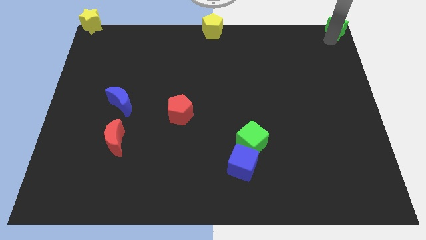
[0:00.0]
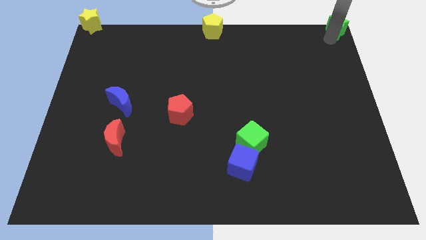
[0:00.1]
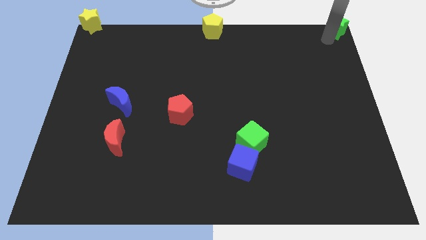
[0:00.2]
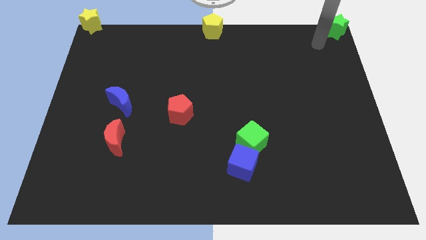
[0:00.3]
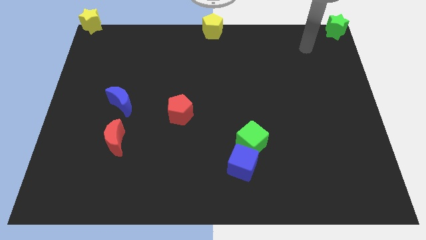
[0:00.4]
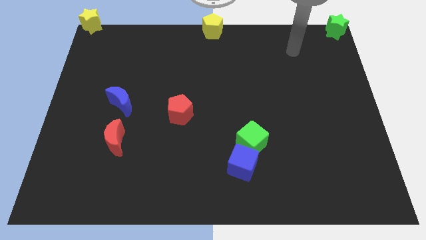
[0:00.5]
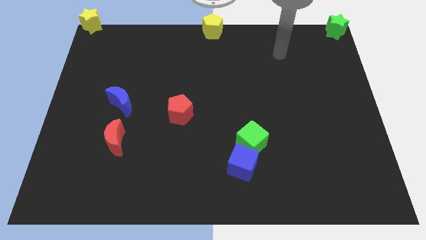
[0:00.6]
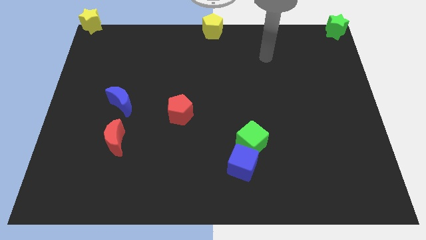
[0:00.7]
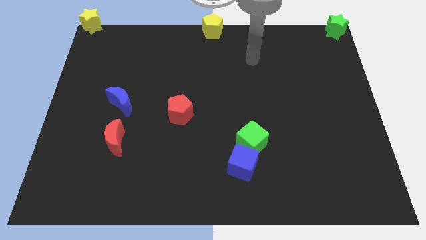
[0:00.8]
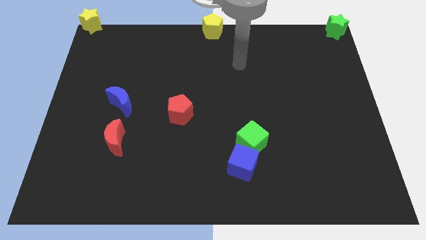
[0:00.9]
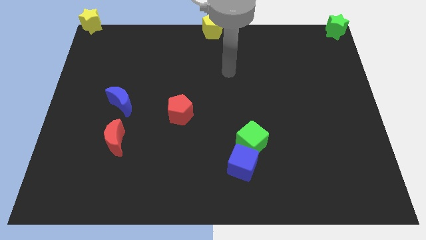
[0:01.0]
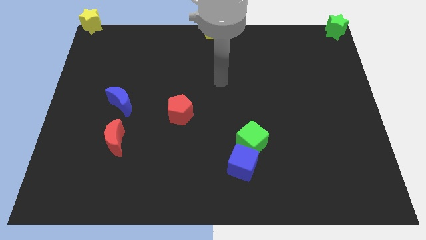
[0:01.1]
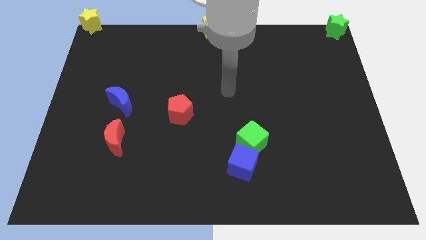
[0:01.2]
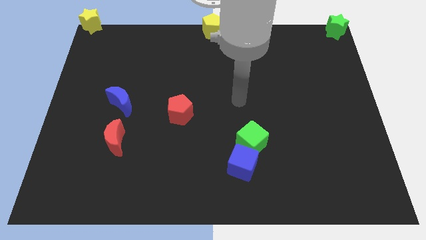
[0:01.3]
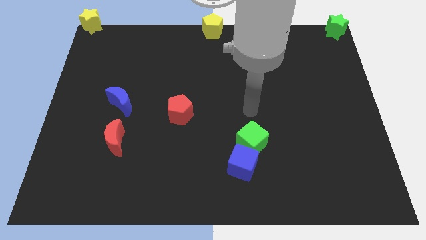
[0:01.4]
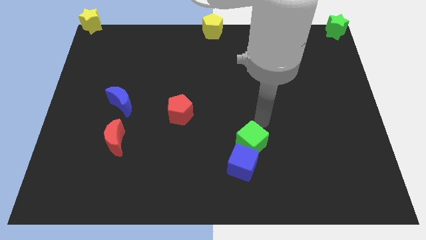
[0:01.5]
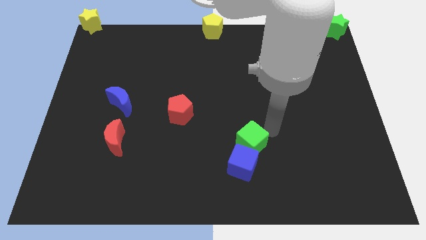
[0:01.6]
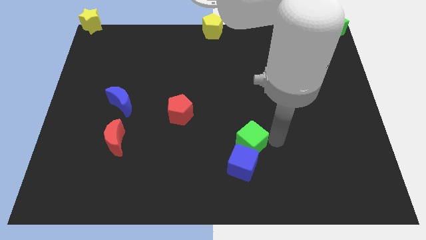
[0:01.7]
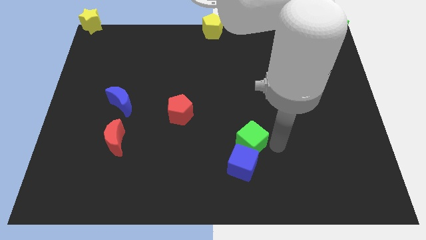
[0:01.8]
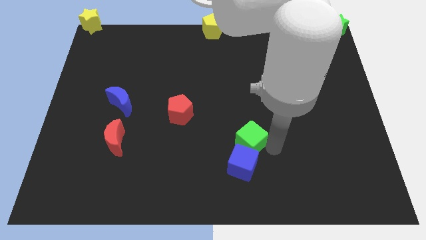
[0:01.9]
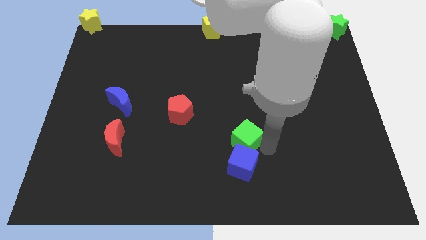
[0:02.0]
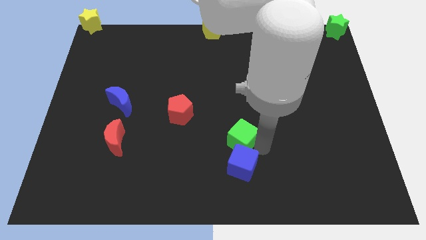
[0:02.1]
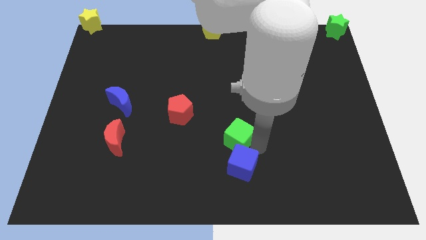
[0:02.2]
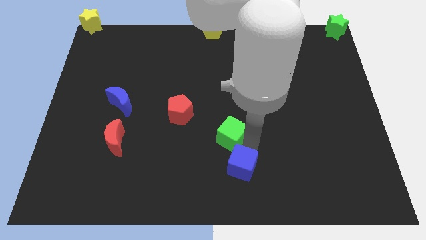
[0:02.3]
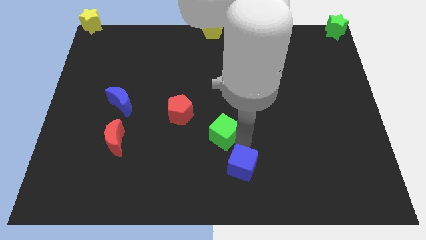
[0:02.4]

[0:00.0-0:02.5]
move the arm away from the green star

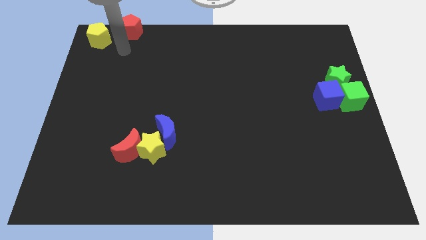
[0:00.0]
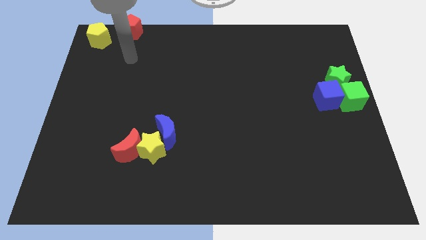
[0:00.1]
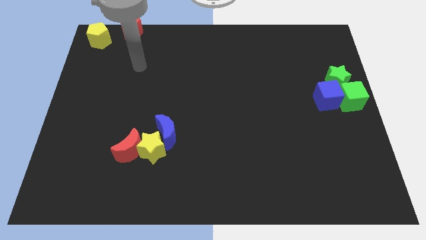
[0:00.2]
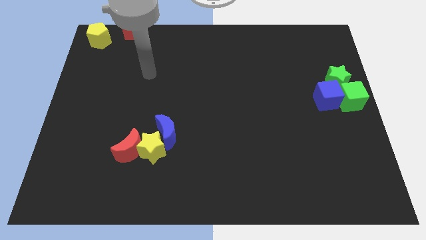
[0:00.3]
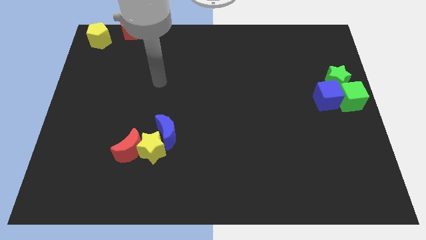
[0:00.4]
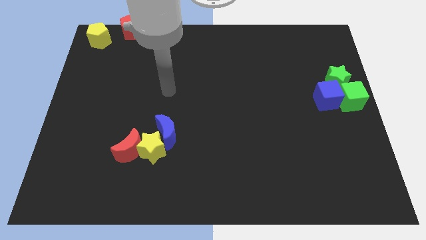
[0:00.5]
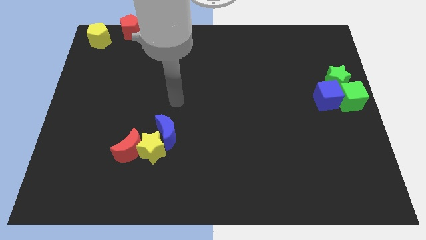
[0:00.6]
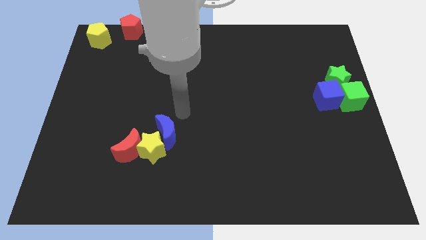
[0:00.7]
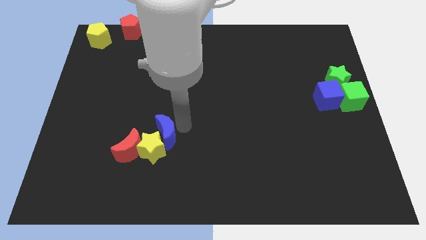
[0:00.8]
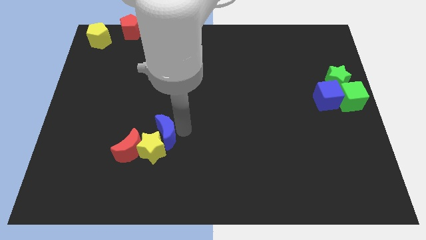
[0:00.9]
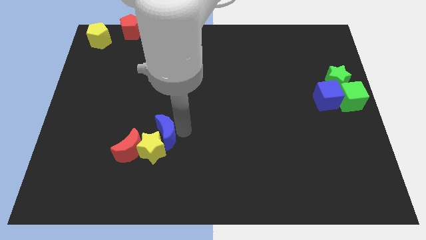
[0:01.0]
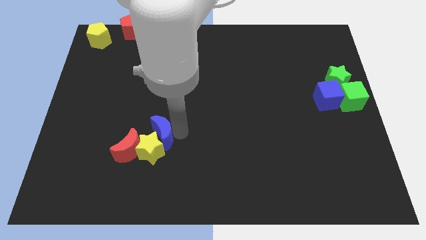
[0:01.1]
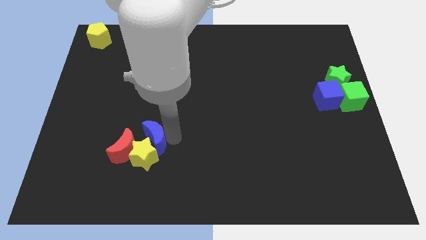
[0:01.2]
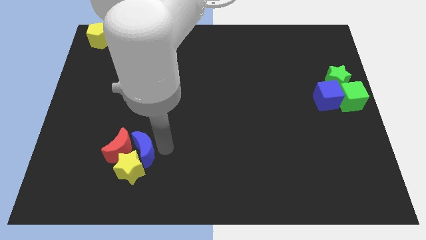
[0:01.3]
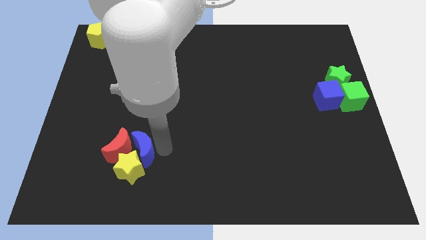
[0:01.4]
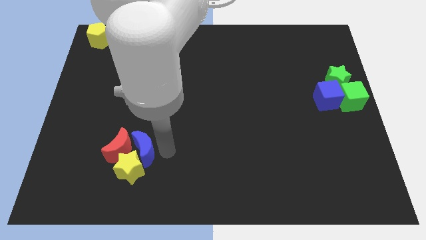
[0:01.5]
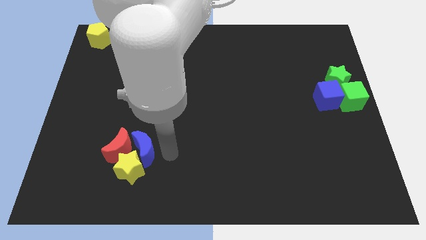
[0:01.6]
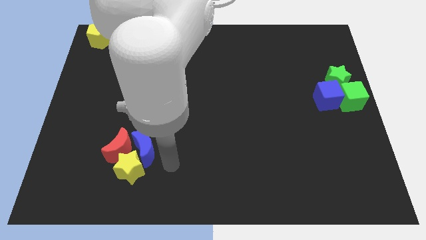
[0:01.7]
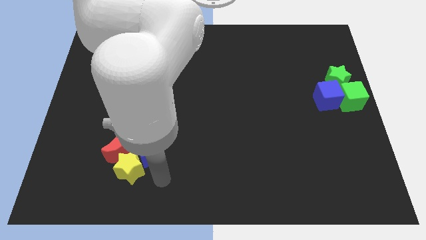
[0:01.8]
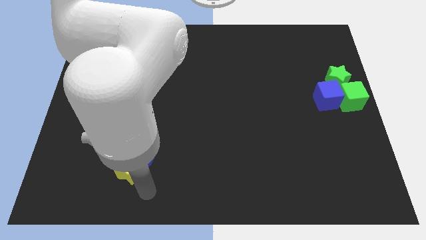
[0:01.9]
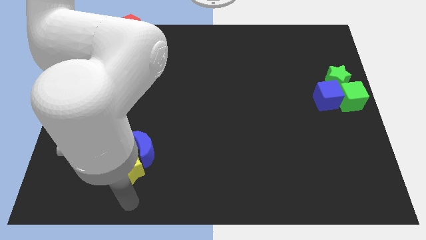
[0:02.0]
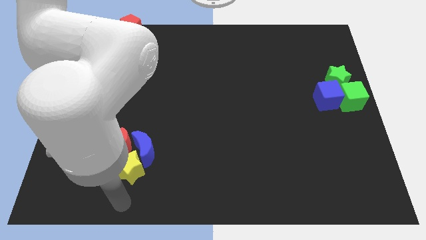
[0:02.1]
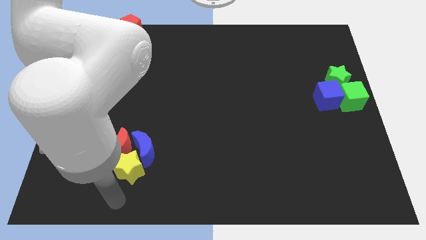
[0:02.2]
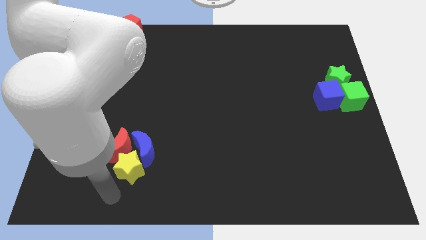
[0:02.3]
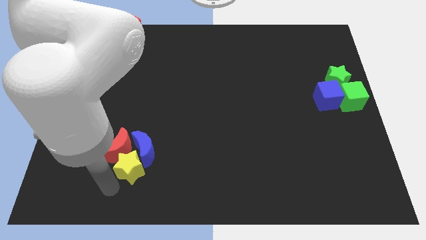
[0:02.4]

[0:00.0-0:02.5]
push the blue crescent along with the yellow star slightly to the bottom

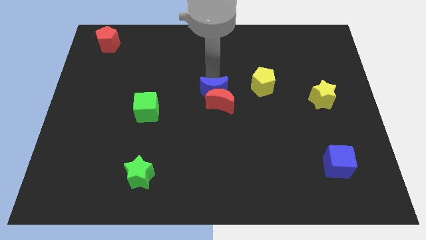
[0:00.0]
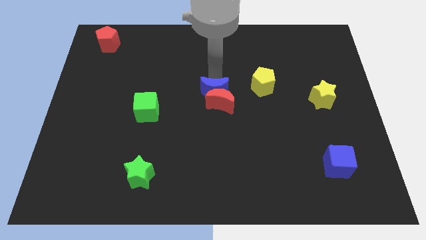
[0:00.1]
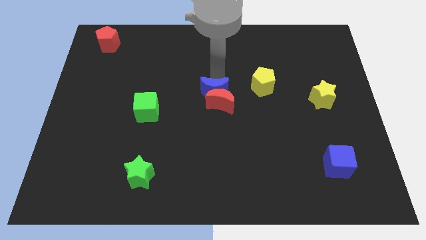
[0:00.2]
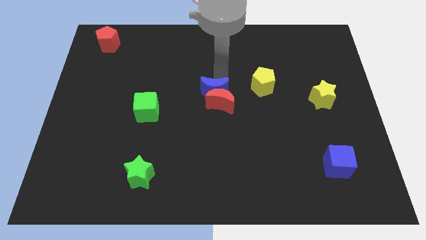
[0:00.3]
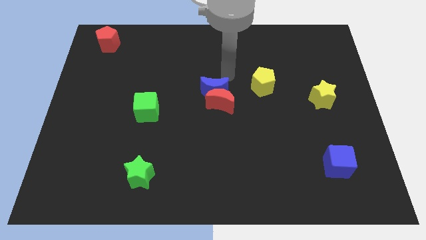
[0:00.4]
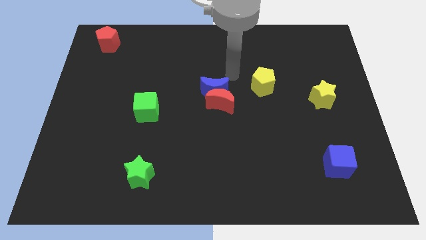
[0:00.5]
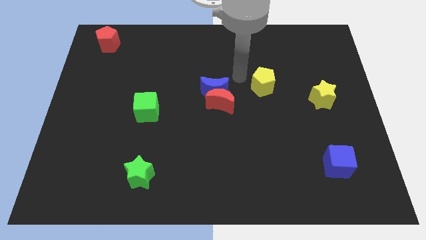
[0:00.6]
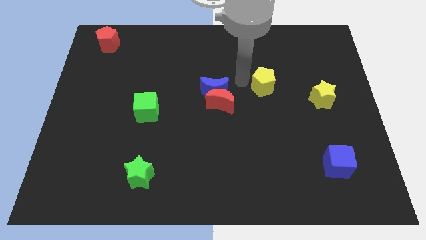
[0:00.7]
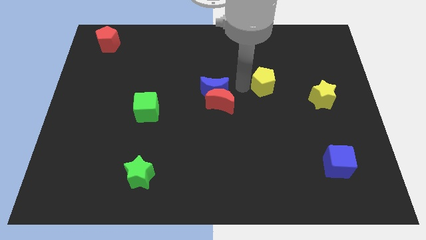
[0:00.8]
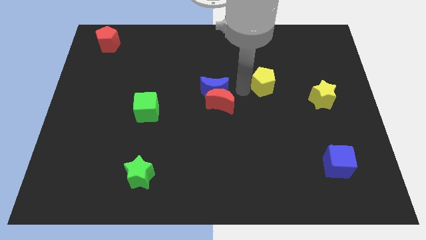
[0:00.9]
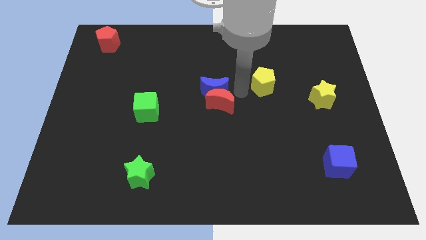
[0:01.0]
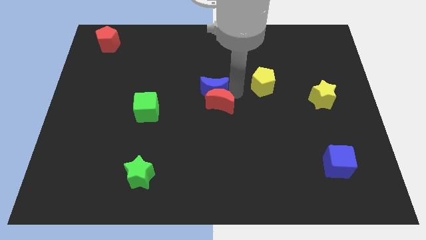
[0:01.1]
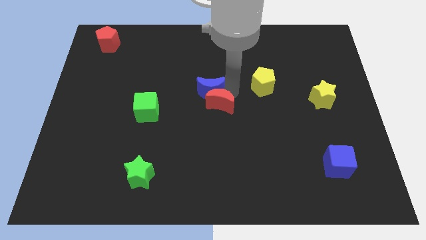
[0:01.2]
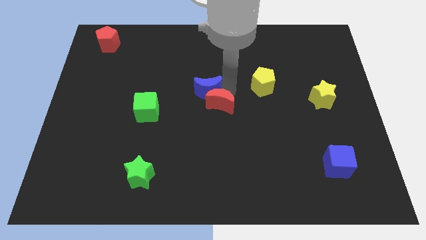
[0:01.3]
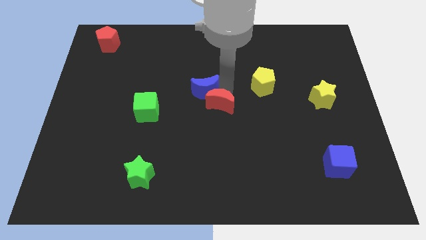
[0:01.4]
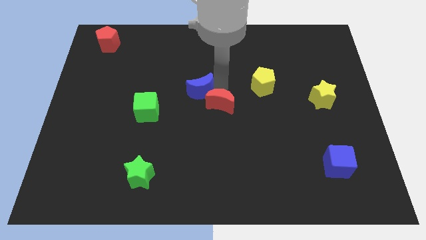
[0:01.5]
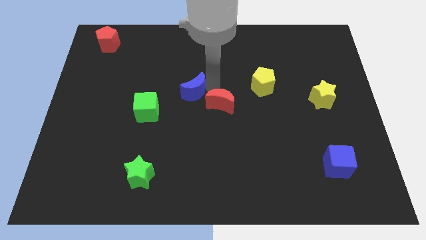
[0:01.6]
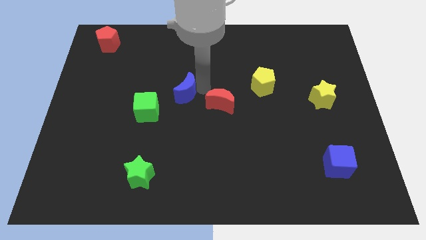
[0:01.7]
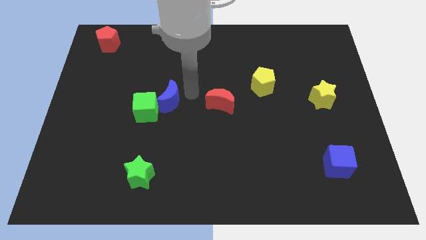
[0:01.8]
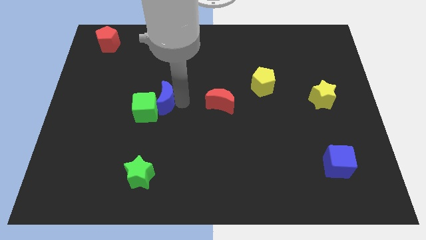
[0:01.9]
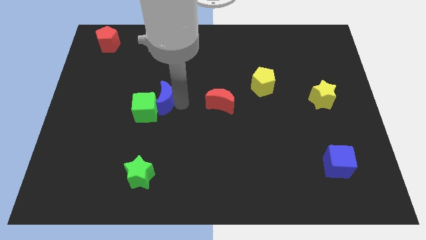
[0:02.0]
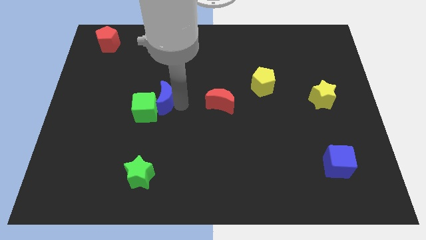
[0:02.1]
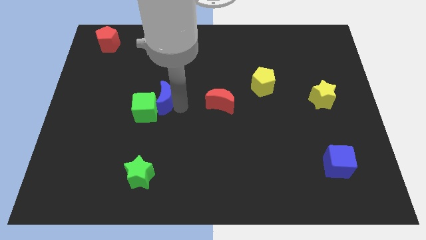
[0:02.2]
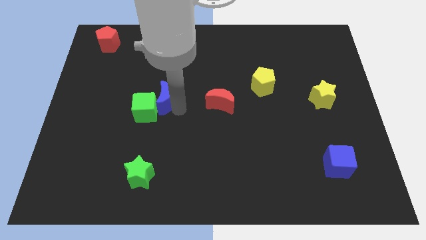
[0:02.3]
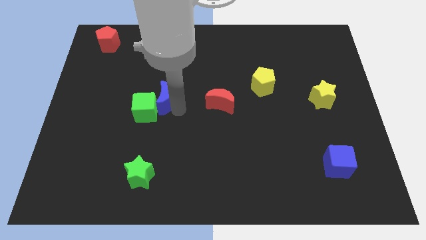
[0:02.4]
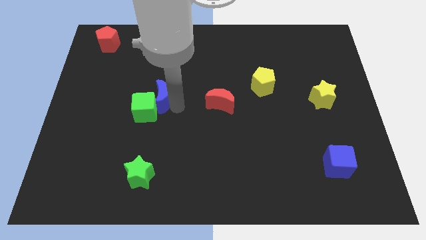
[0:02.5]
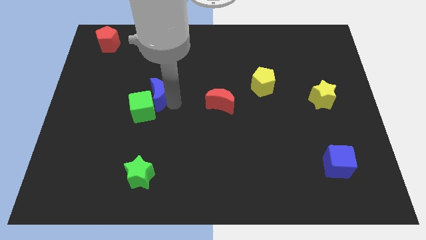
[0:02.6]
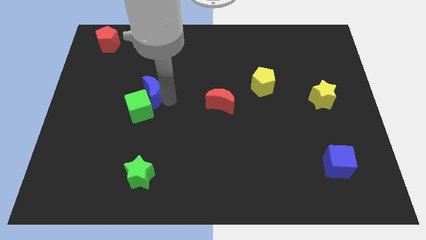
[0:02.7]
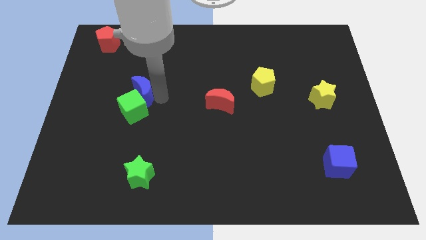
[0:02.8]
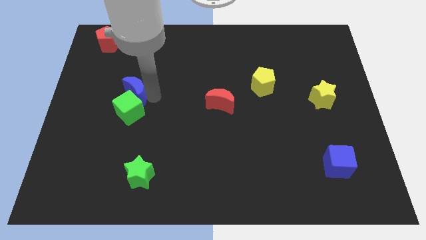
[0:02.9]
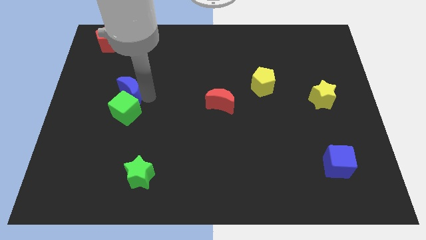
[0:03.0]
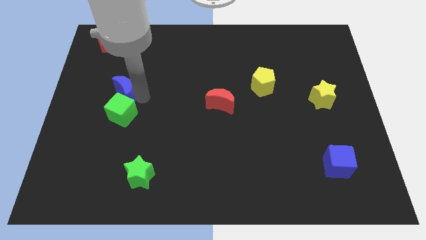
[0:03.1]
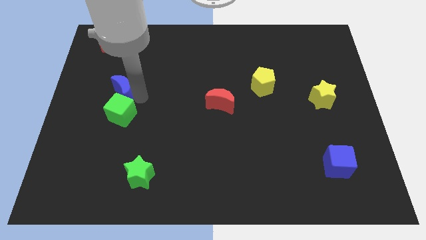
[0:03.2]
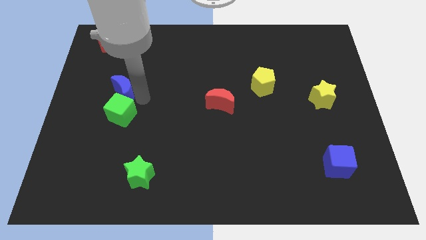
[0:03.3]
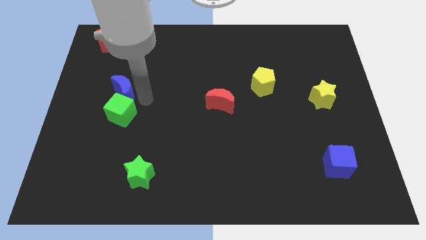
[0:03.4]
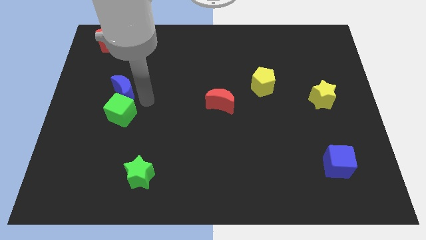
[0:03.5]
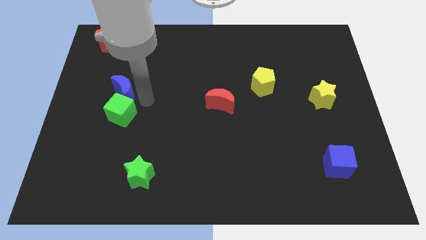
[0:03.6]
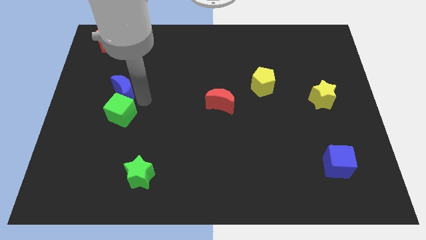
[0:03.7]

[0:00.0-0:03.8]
separate blue moon from red moon
